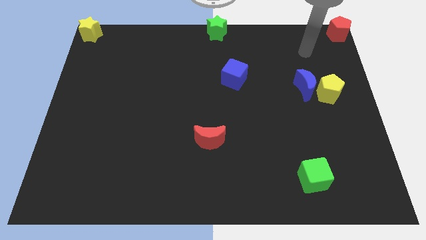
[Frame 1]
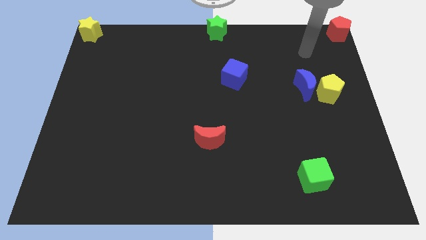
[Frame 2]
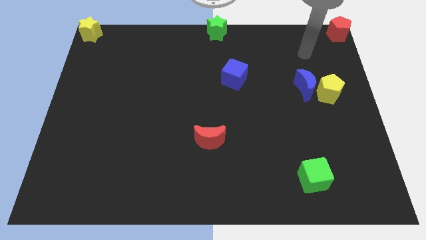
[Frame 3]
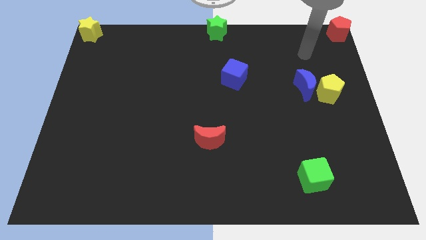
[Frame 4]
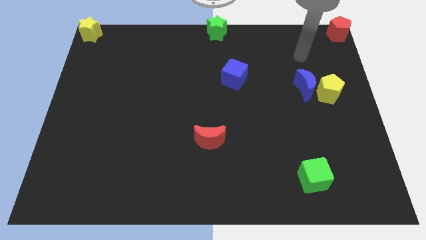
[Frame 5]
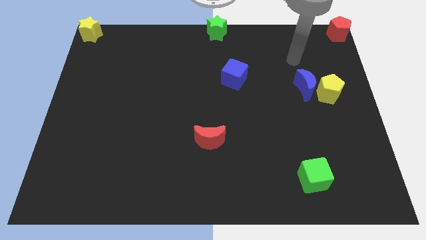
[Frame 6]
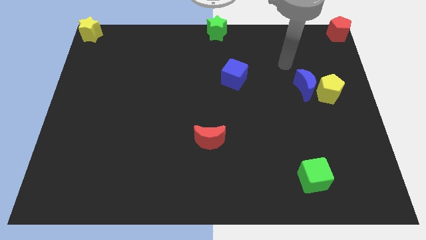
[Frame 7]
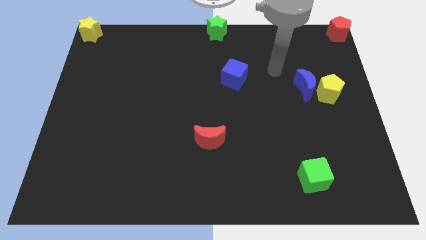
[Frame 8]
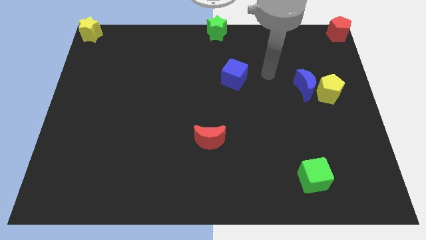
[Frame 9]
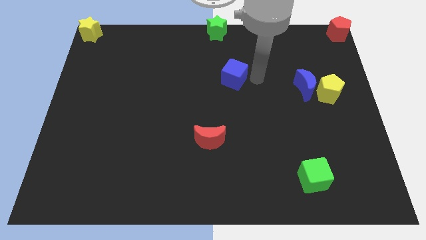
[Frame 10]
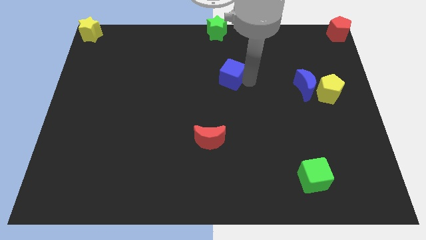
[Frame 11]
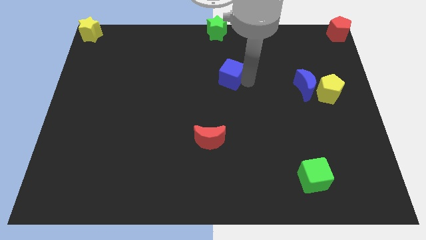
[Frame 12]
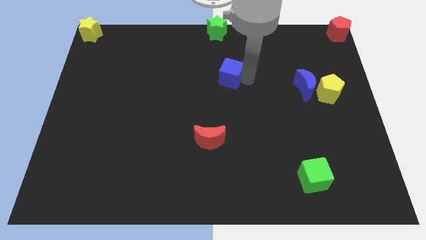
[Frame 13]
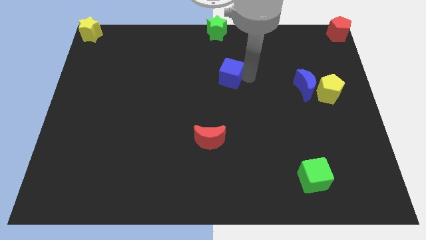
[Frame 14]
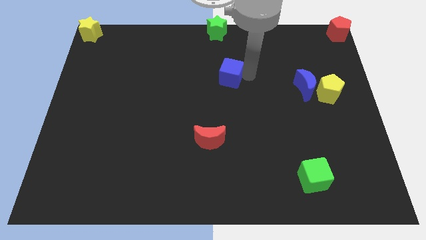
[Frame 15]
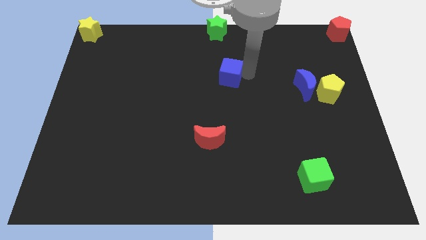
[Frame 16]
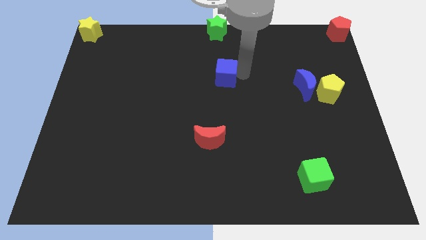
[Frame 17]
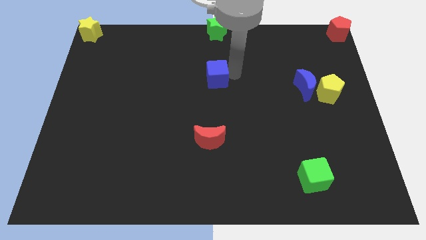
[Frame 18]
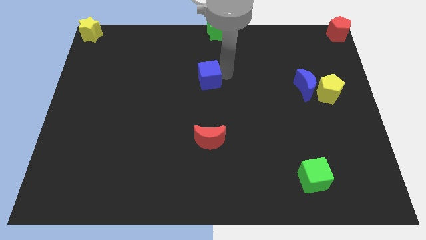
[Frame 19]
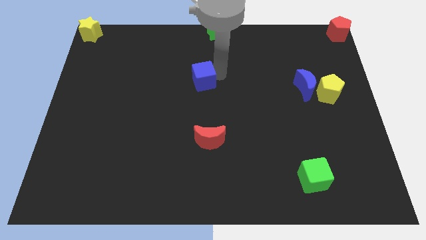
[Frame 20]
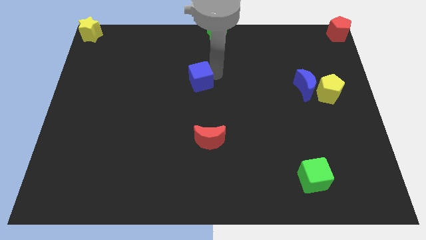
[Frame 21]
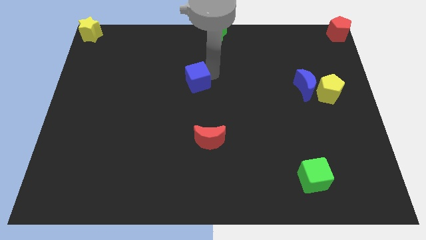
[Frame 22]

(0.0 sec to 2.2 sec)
push the blue cube towards the left side

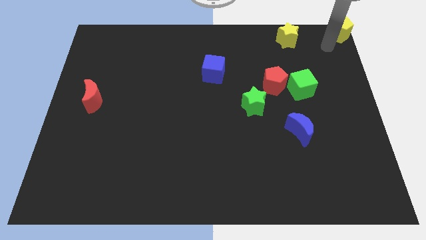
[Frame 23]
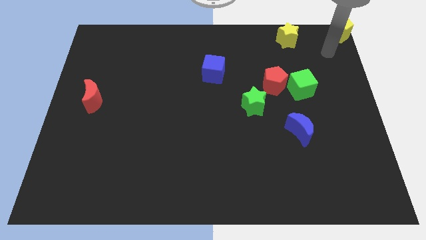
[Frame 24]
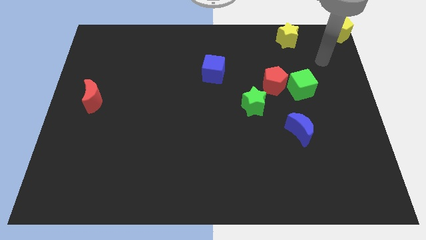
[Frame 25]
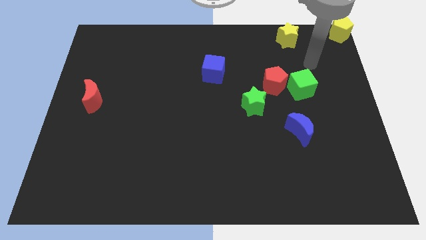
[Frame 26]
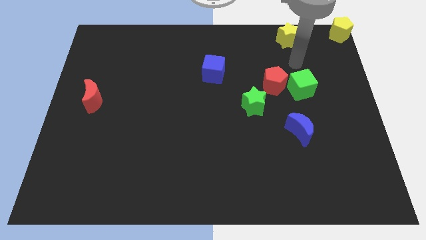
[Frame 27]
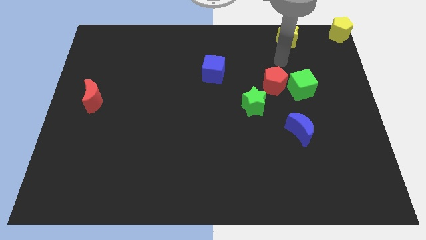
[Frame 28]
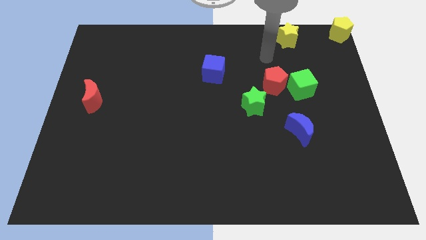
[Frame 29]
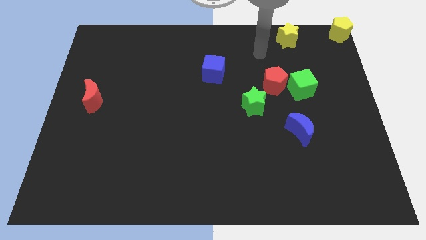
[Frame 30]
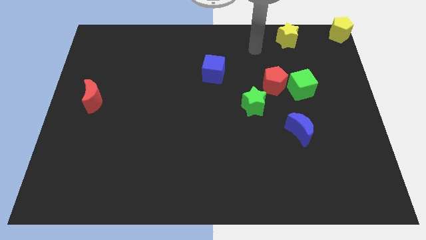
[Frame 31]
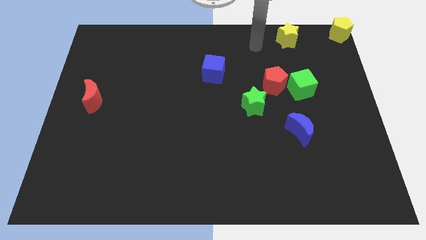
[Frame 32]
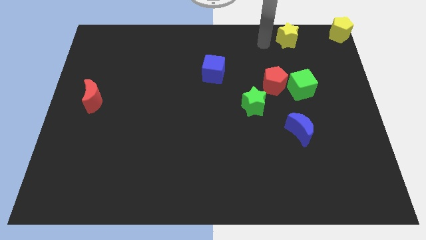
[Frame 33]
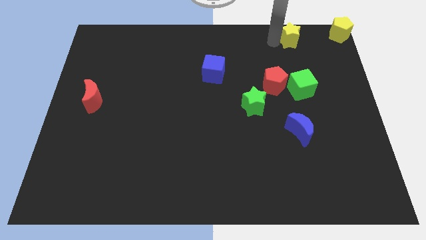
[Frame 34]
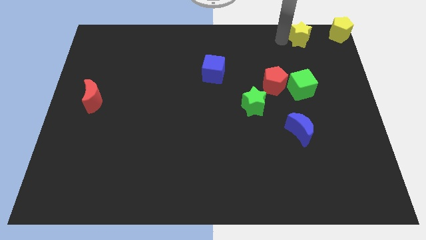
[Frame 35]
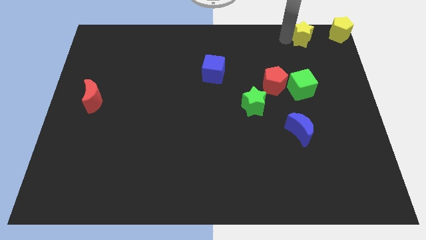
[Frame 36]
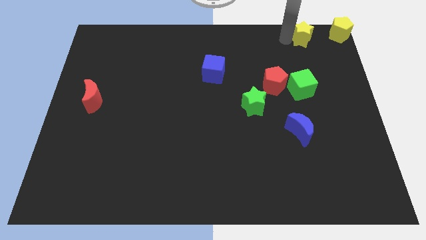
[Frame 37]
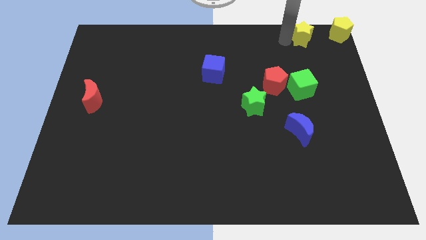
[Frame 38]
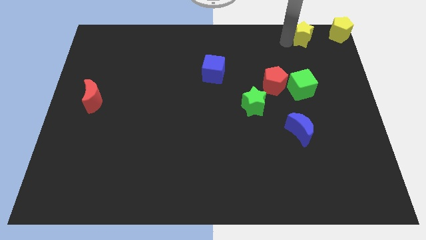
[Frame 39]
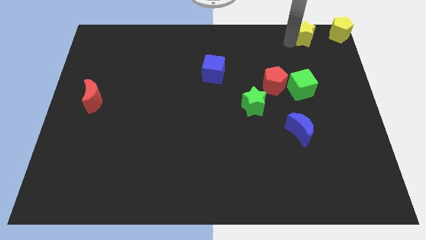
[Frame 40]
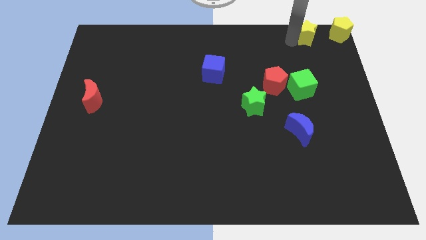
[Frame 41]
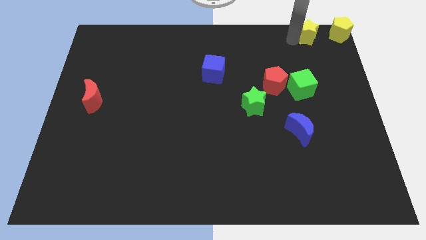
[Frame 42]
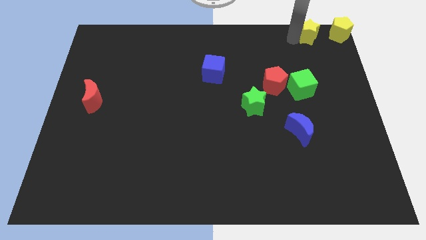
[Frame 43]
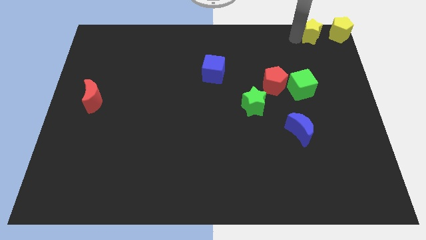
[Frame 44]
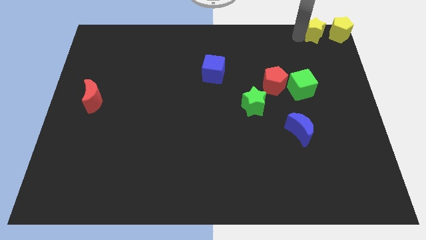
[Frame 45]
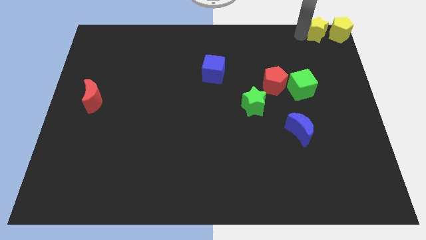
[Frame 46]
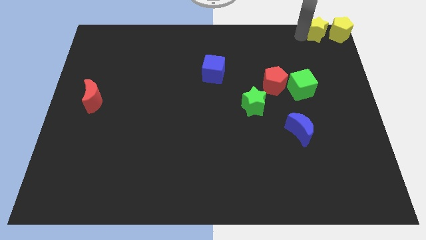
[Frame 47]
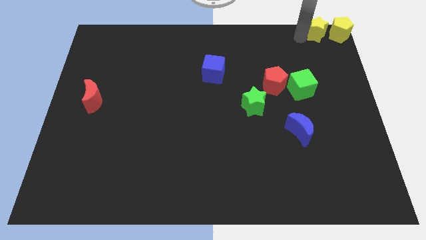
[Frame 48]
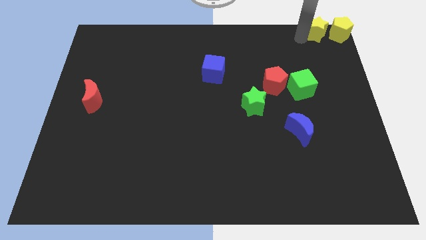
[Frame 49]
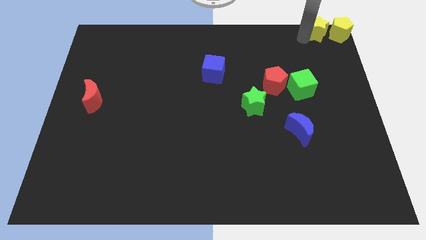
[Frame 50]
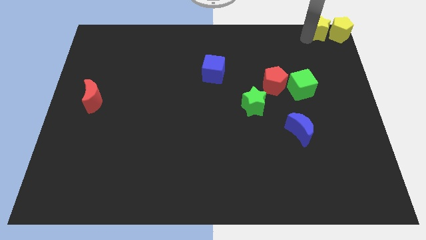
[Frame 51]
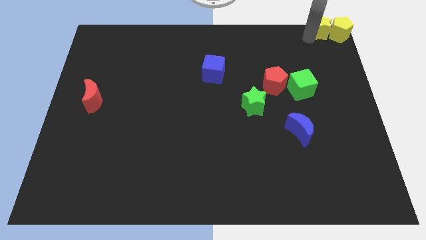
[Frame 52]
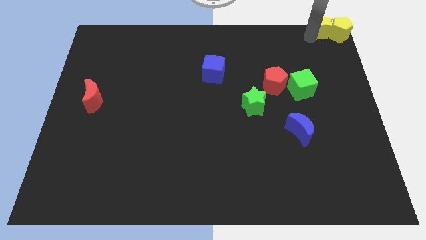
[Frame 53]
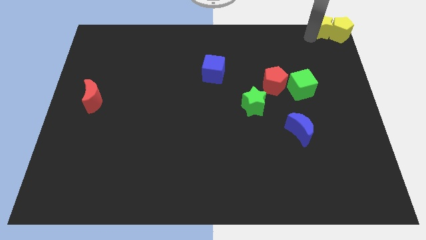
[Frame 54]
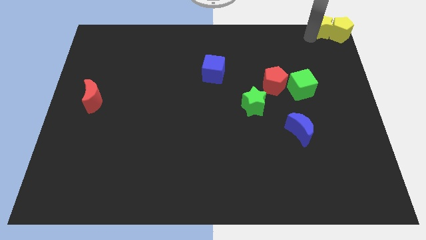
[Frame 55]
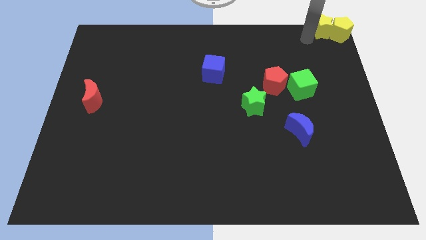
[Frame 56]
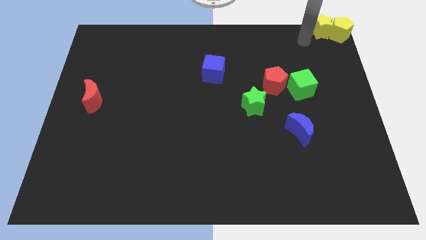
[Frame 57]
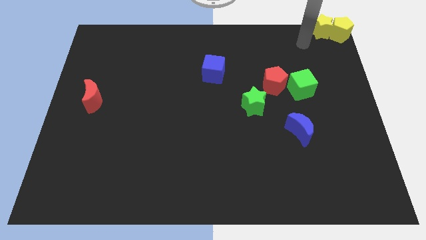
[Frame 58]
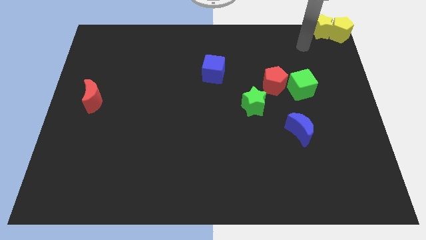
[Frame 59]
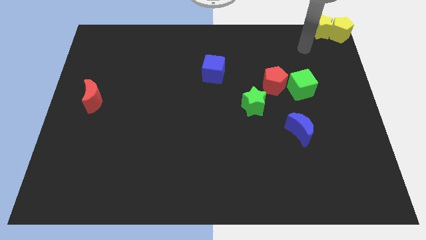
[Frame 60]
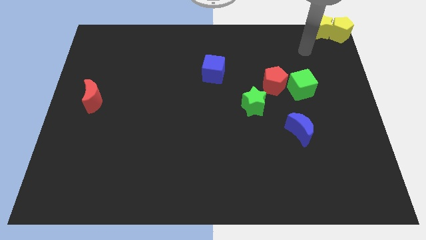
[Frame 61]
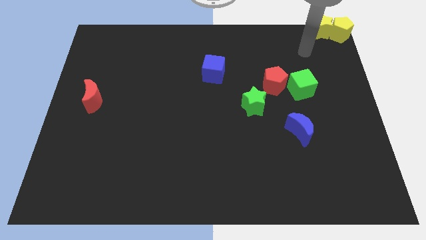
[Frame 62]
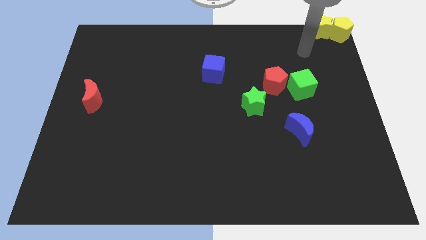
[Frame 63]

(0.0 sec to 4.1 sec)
slide the yellow star to the left side of the yellow pentagon

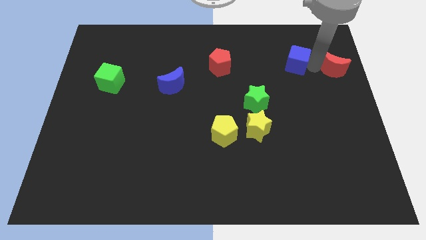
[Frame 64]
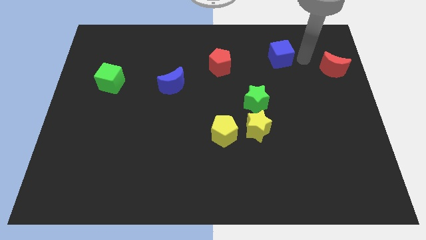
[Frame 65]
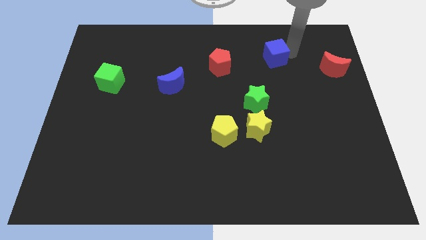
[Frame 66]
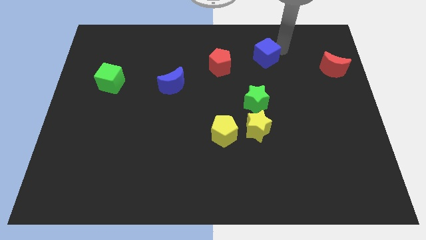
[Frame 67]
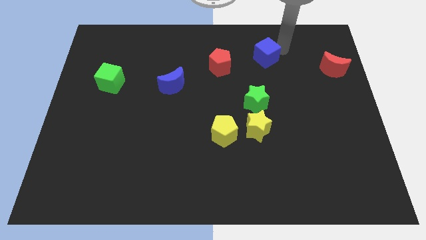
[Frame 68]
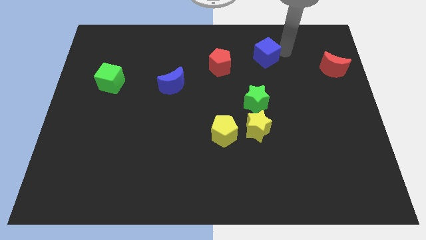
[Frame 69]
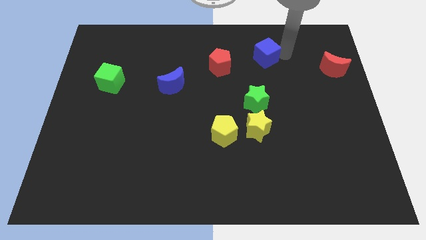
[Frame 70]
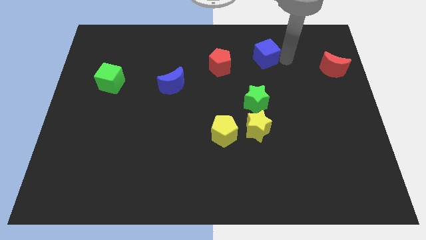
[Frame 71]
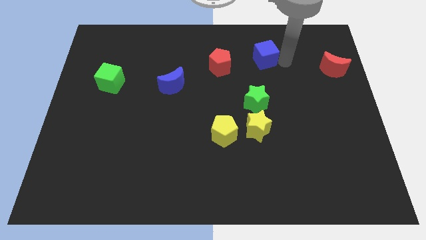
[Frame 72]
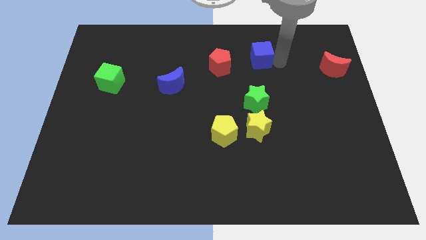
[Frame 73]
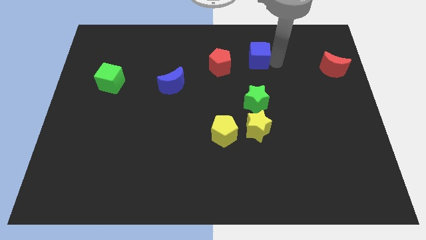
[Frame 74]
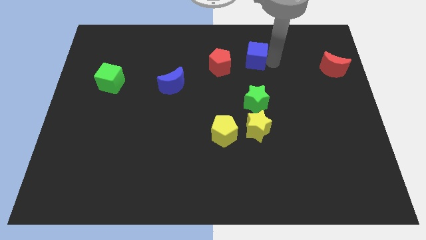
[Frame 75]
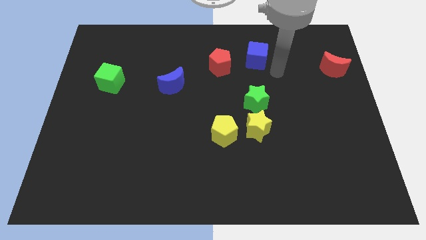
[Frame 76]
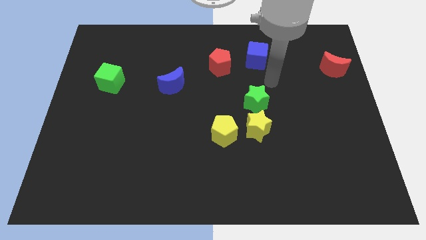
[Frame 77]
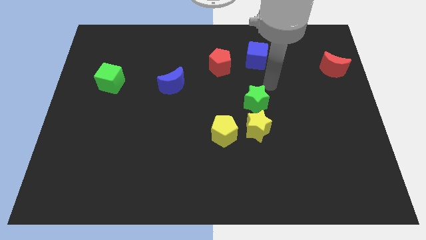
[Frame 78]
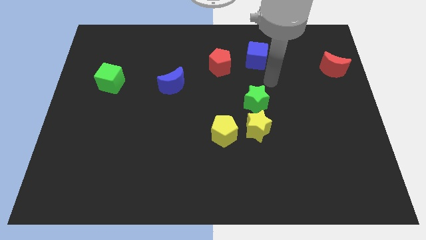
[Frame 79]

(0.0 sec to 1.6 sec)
push the blue cube towards the red pentagon

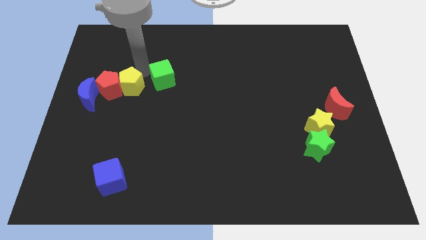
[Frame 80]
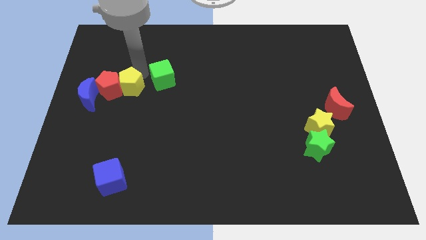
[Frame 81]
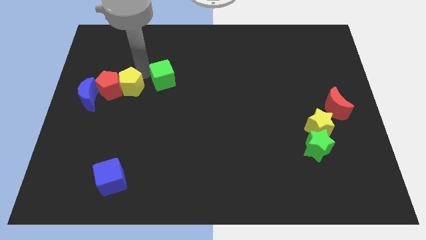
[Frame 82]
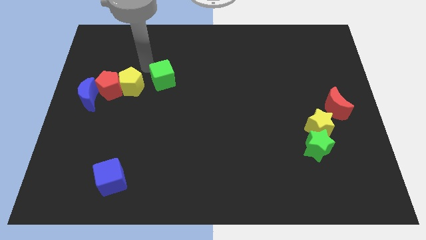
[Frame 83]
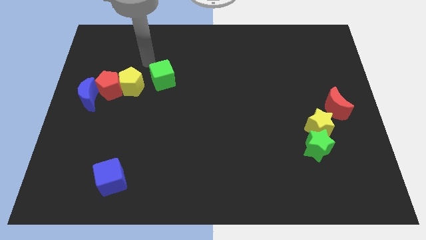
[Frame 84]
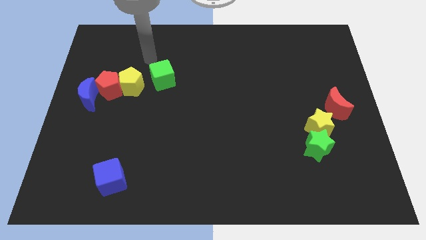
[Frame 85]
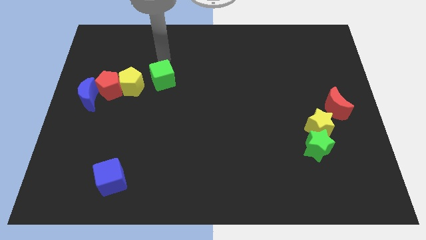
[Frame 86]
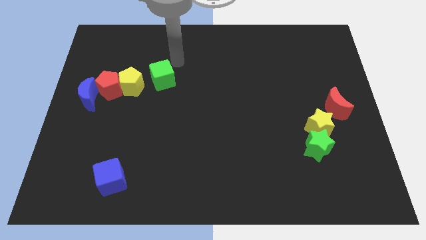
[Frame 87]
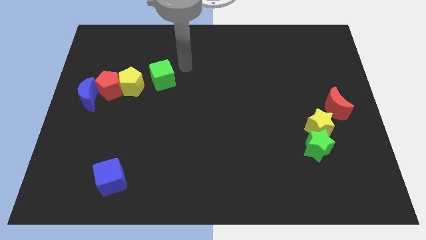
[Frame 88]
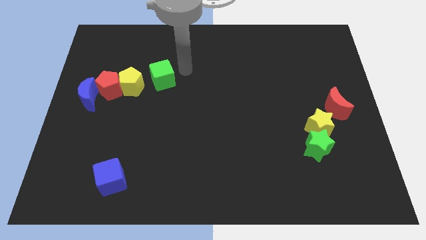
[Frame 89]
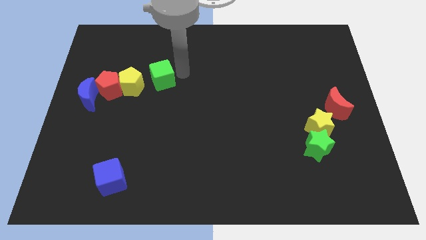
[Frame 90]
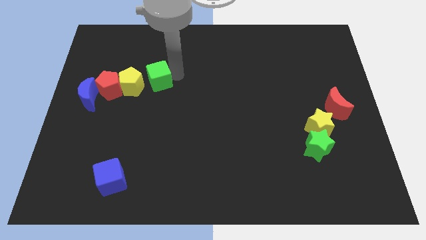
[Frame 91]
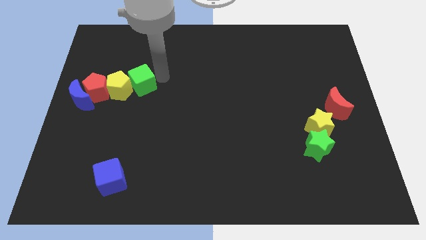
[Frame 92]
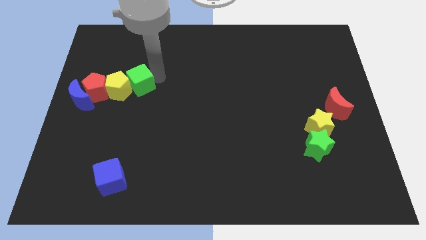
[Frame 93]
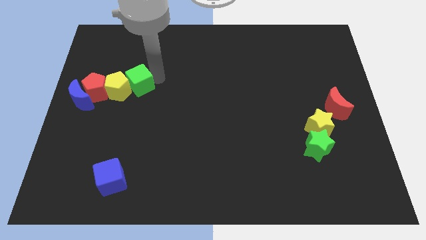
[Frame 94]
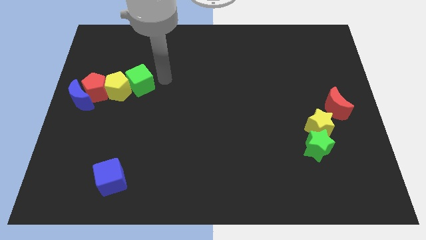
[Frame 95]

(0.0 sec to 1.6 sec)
push the green cube into the yellow pentagon
